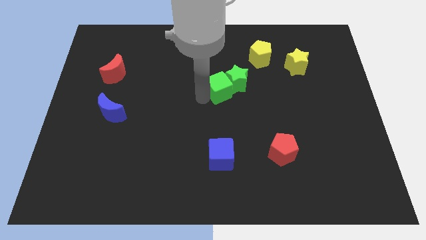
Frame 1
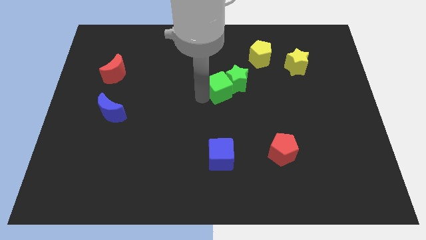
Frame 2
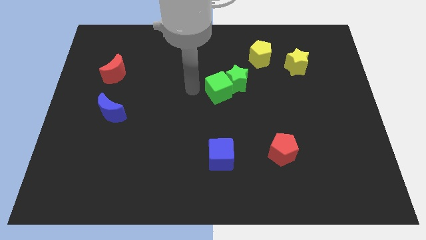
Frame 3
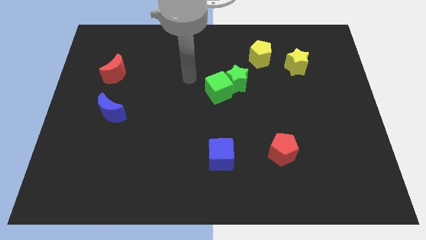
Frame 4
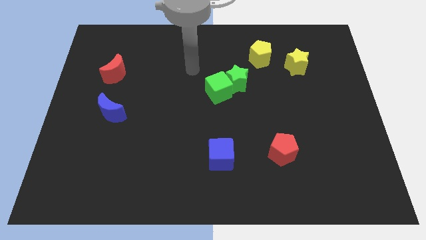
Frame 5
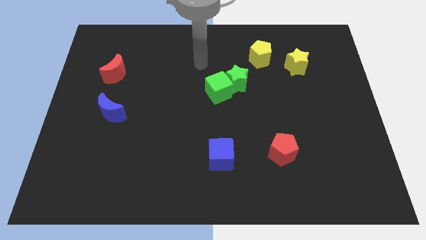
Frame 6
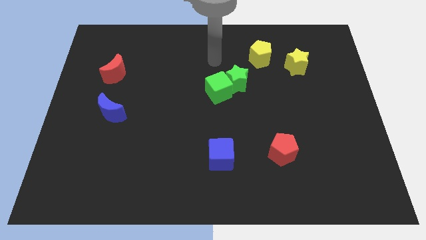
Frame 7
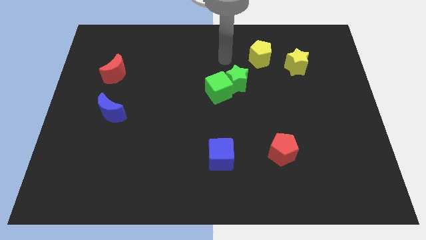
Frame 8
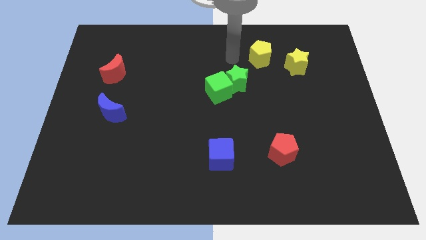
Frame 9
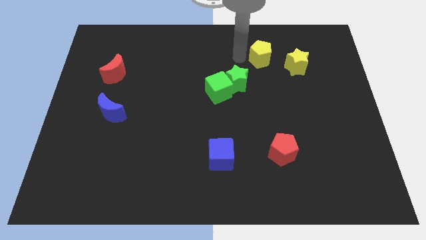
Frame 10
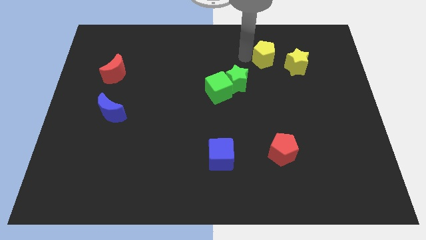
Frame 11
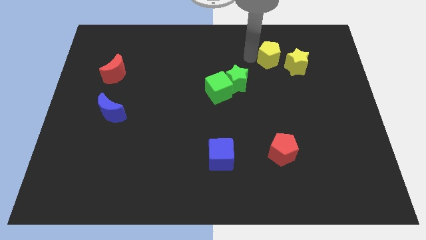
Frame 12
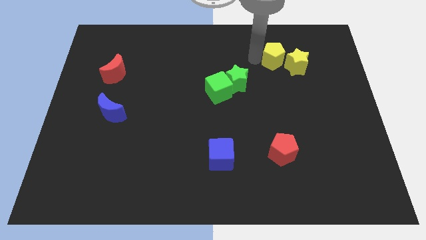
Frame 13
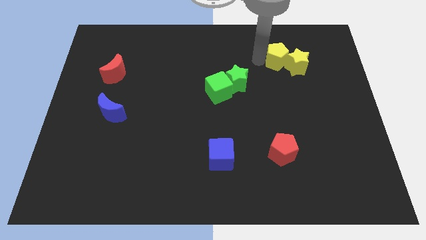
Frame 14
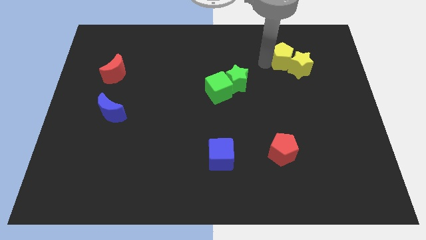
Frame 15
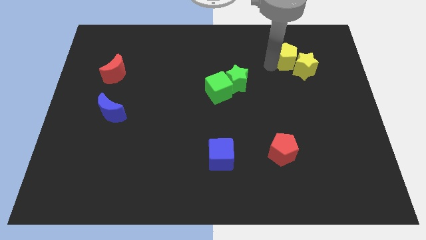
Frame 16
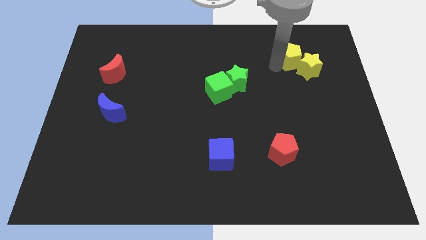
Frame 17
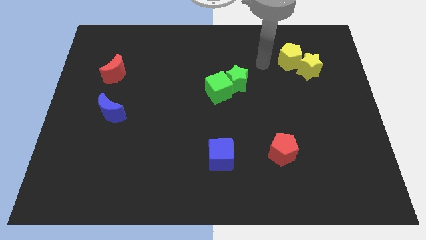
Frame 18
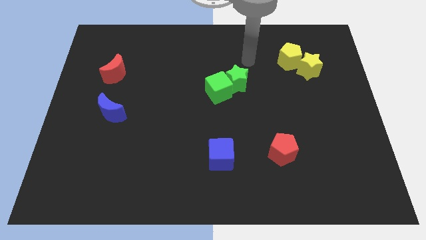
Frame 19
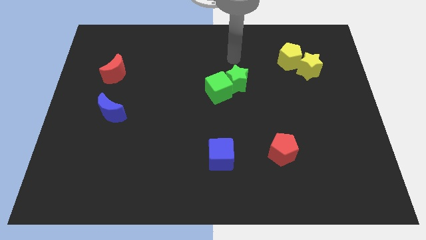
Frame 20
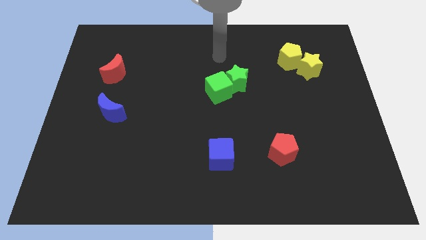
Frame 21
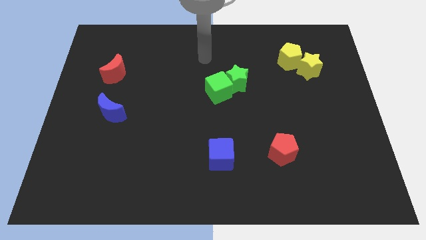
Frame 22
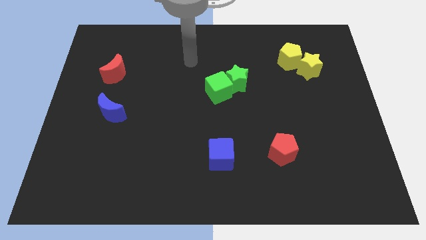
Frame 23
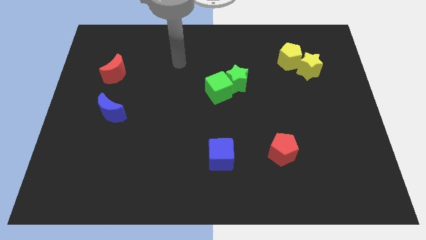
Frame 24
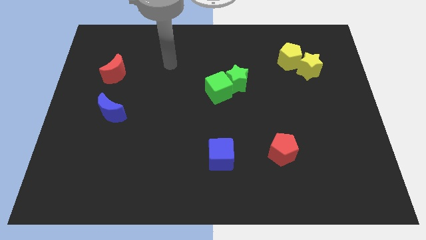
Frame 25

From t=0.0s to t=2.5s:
push the yellow pentagon into the yellow star

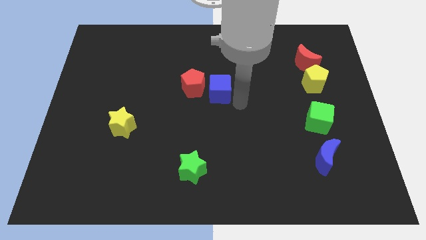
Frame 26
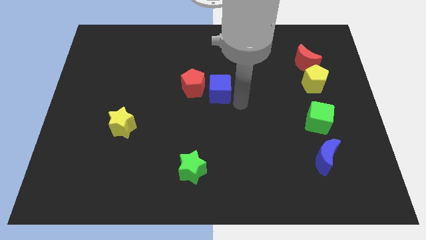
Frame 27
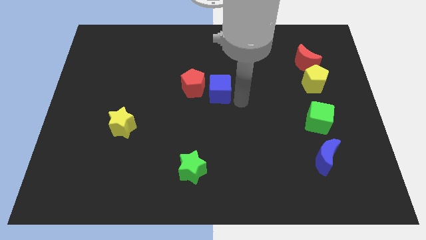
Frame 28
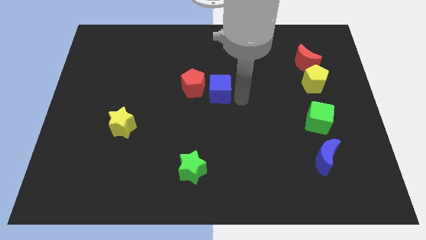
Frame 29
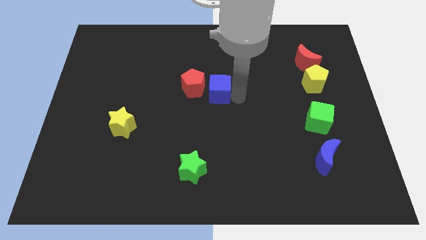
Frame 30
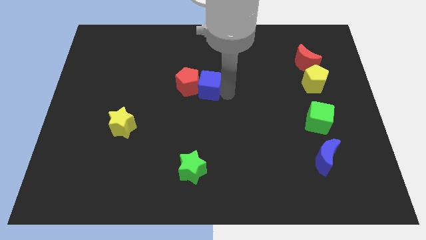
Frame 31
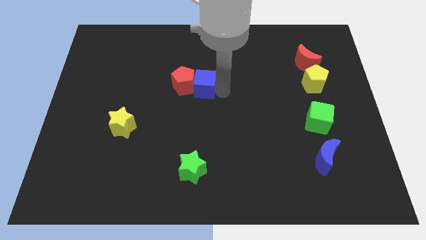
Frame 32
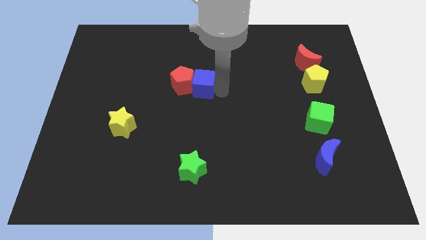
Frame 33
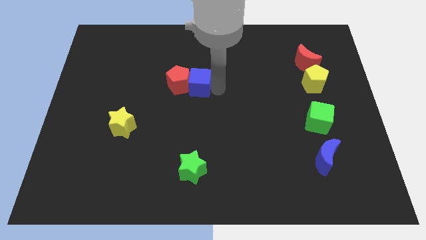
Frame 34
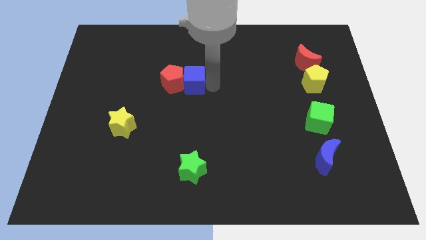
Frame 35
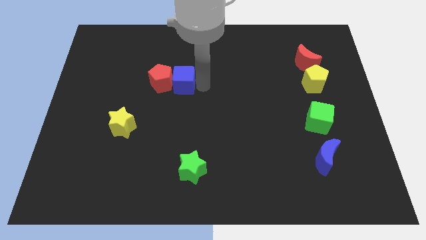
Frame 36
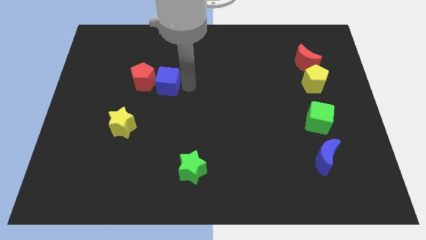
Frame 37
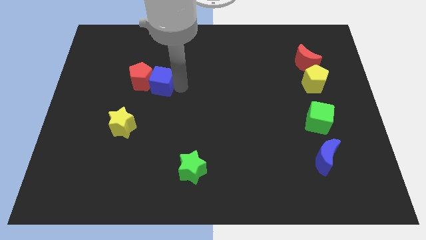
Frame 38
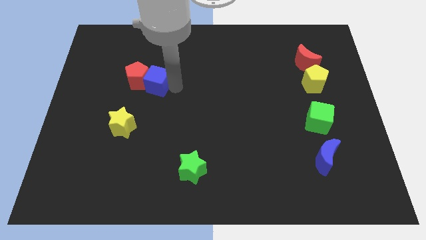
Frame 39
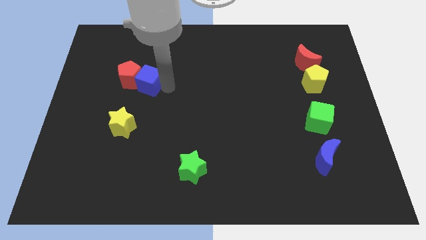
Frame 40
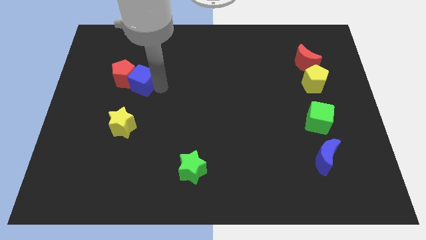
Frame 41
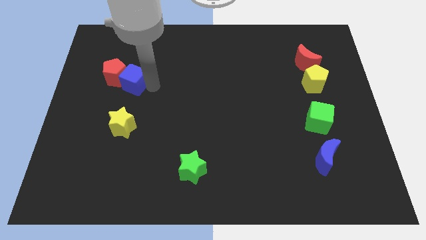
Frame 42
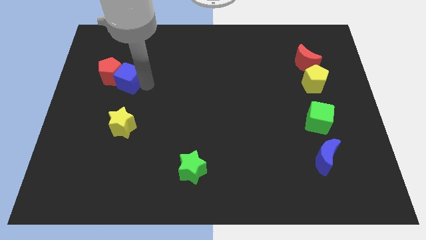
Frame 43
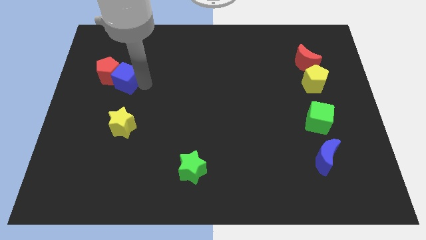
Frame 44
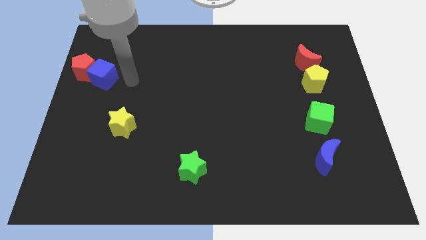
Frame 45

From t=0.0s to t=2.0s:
move the blue moon and red pentagon towards the left side of the board

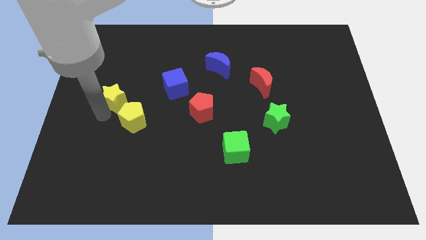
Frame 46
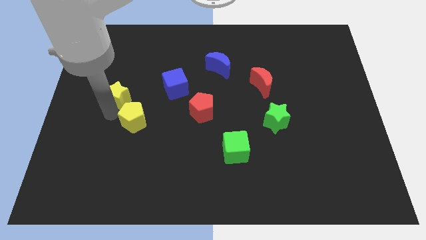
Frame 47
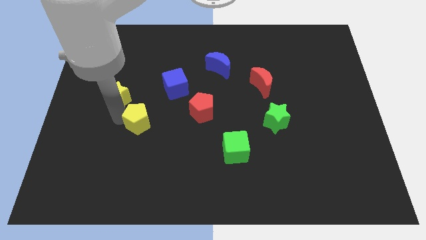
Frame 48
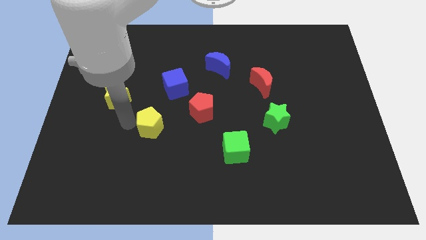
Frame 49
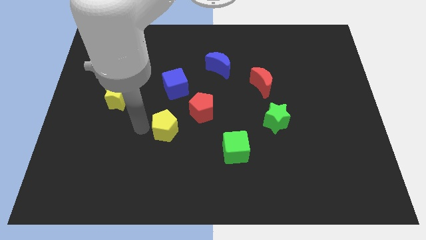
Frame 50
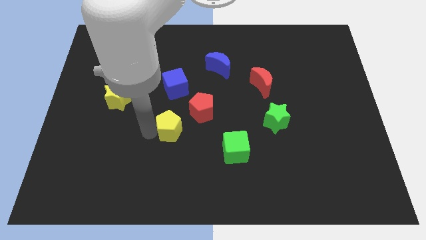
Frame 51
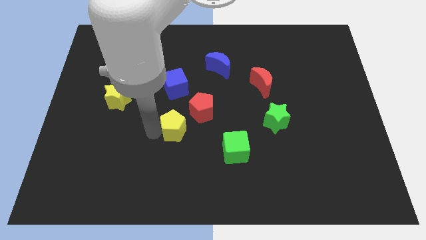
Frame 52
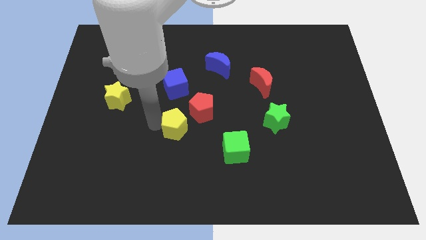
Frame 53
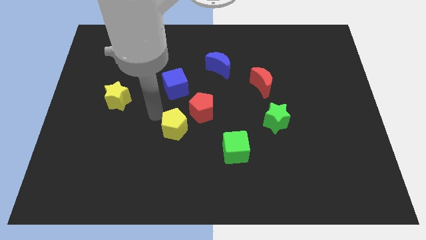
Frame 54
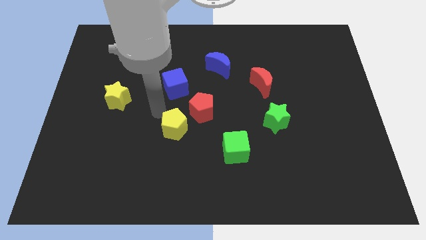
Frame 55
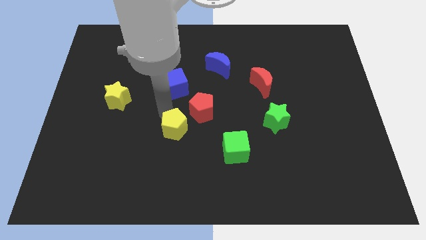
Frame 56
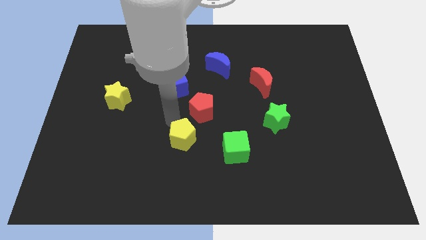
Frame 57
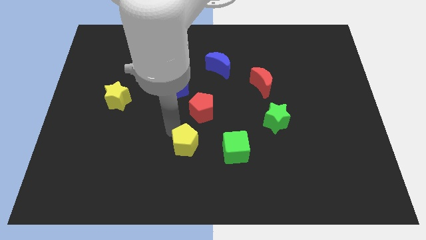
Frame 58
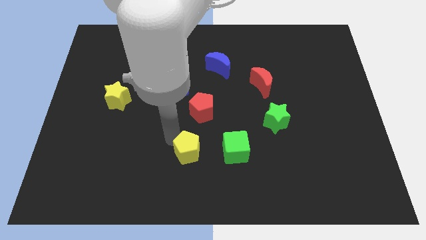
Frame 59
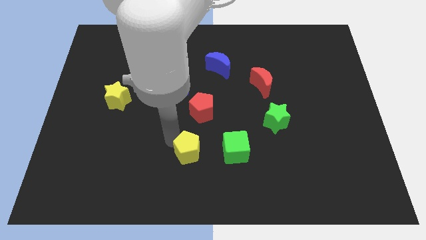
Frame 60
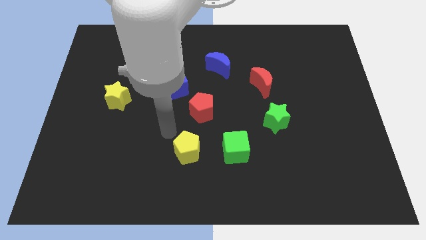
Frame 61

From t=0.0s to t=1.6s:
slide the yellow pentagon towards the left side of the green cube

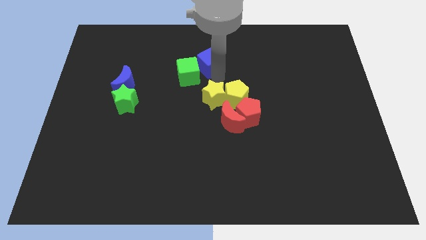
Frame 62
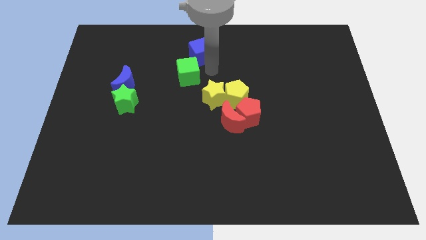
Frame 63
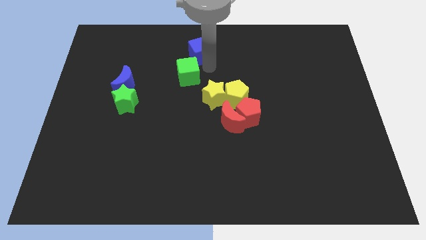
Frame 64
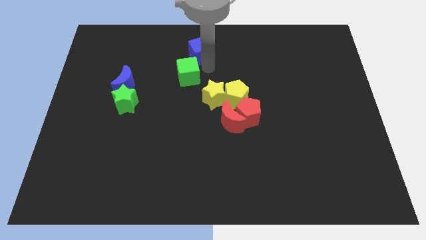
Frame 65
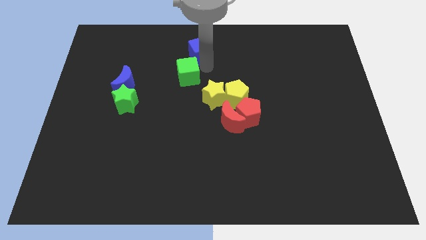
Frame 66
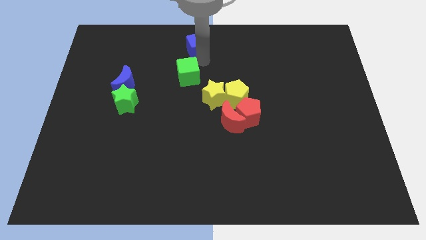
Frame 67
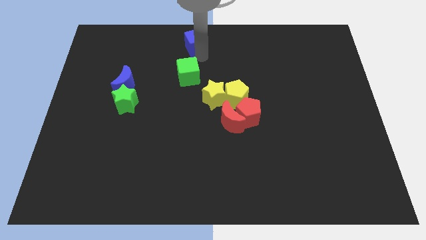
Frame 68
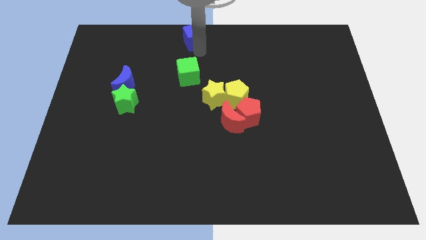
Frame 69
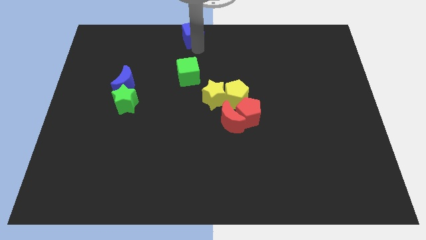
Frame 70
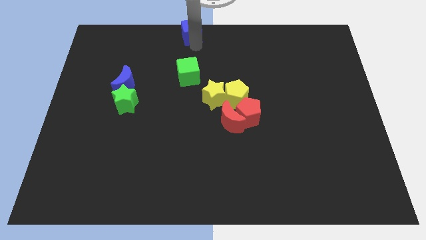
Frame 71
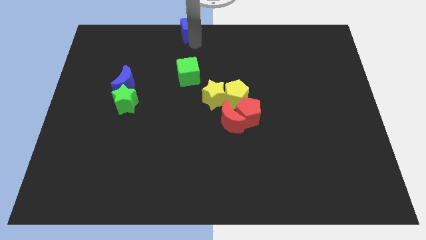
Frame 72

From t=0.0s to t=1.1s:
push the blue cube to the top center of the board

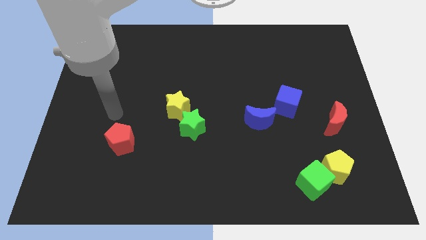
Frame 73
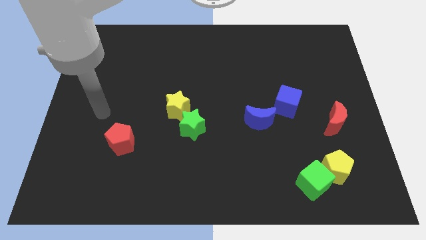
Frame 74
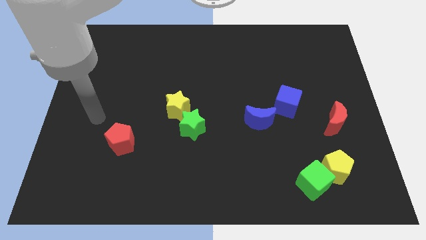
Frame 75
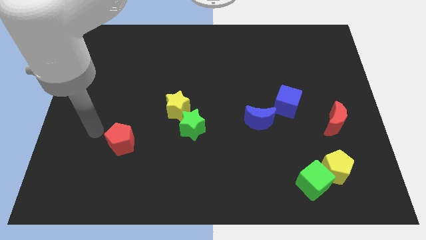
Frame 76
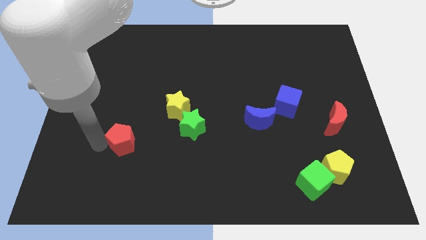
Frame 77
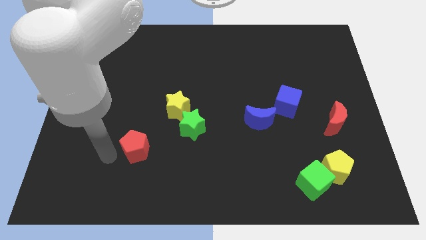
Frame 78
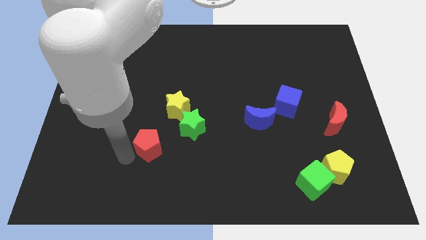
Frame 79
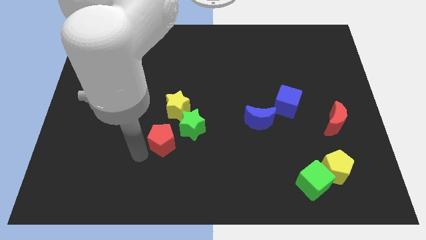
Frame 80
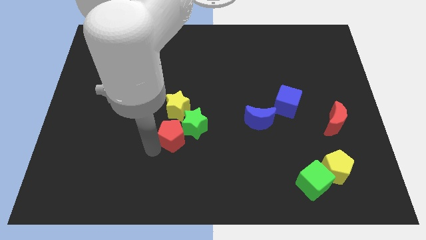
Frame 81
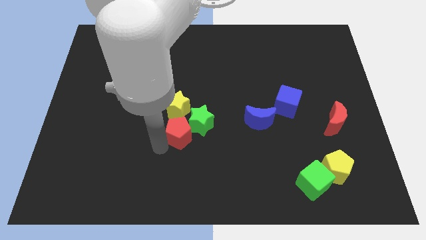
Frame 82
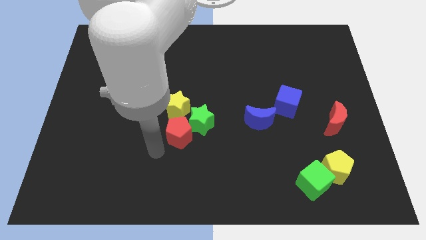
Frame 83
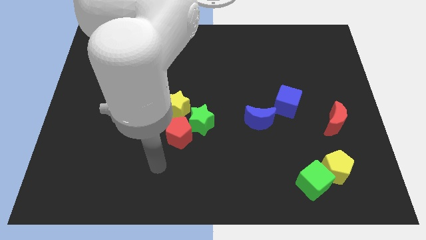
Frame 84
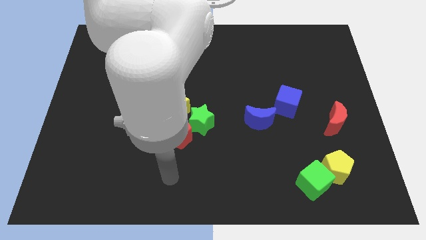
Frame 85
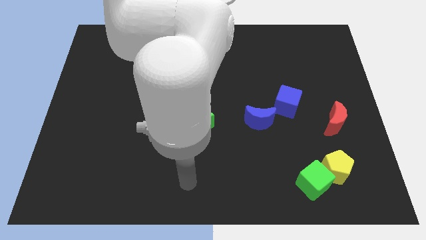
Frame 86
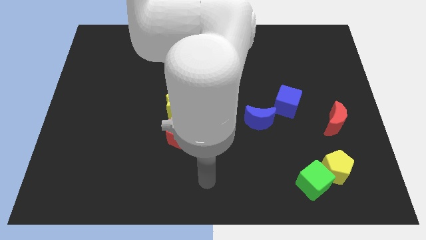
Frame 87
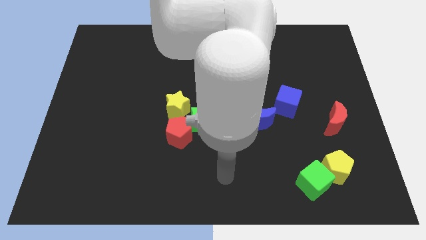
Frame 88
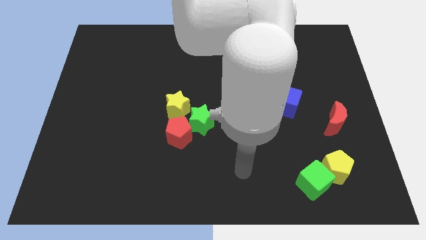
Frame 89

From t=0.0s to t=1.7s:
slightly push green star with red pentagon
